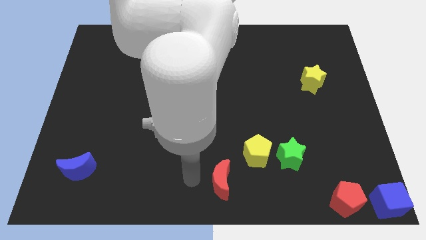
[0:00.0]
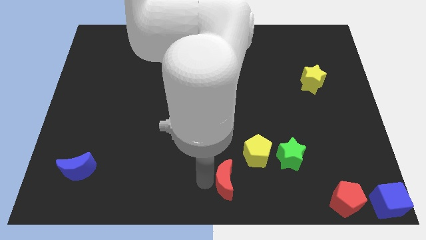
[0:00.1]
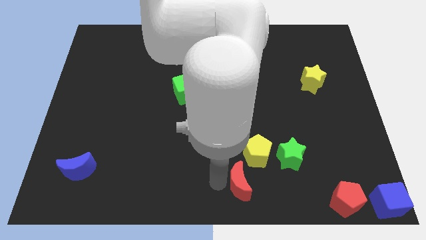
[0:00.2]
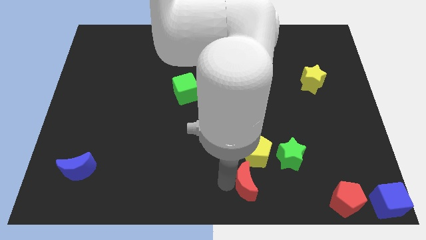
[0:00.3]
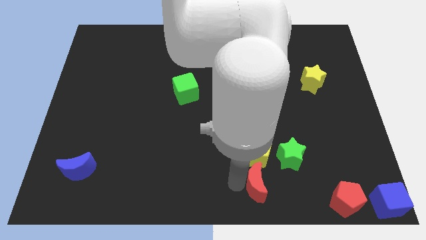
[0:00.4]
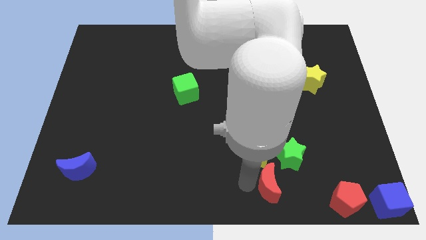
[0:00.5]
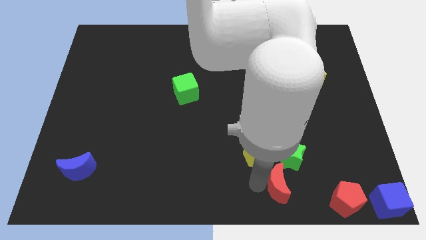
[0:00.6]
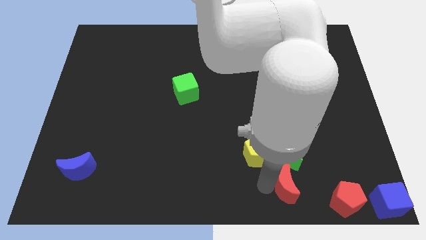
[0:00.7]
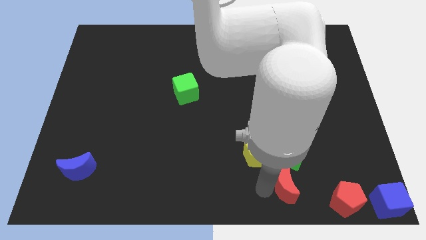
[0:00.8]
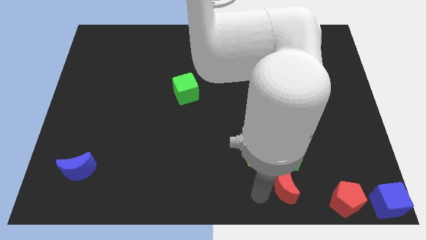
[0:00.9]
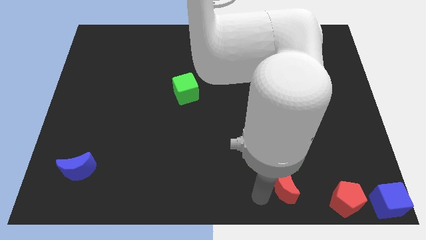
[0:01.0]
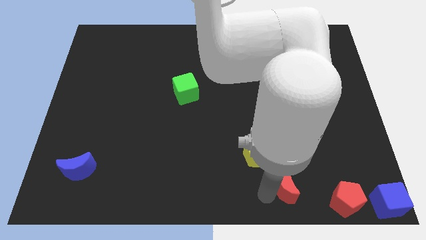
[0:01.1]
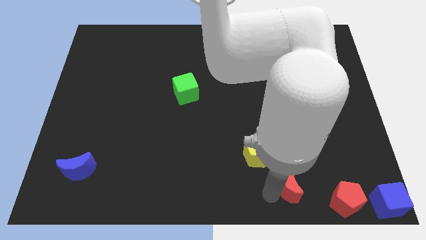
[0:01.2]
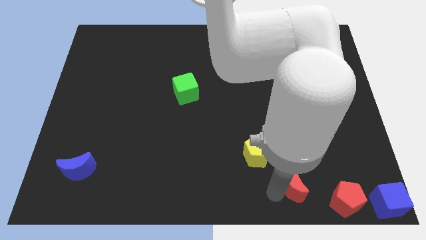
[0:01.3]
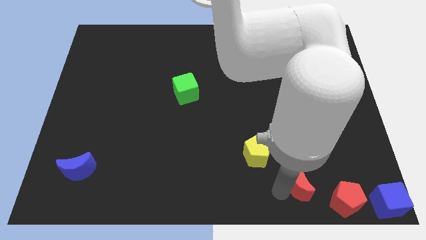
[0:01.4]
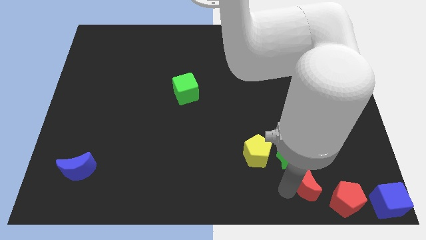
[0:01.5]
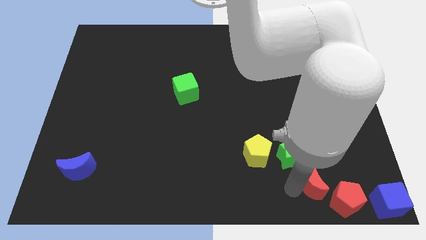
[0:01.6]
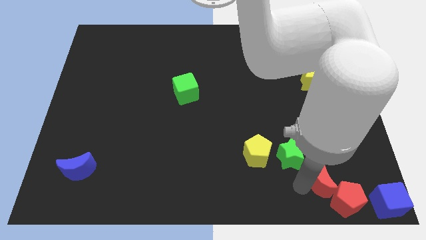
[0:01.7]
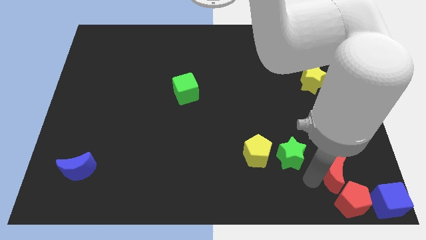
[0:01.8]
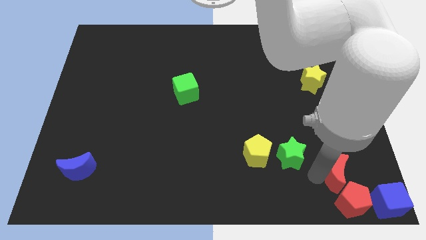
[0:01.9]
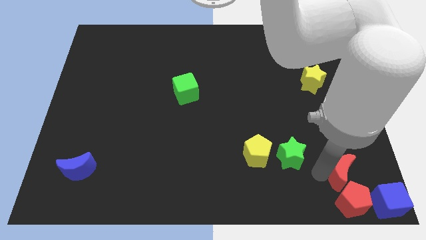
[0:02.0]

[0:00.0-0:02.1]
push red crescent to the top of red pentagon

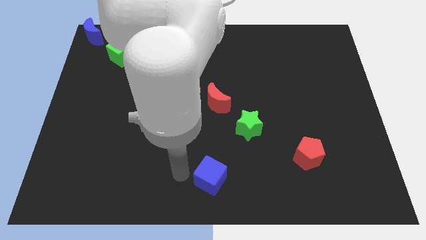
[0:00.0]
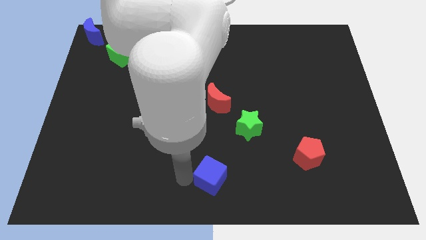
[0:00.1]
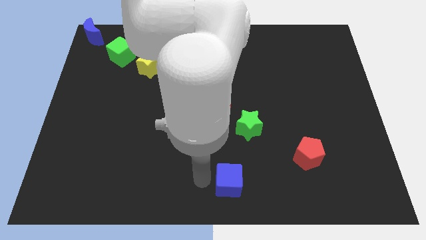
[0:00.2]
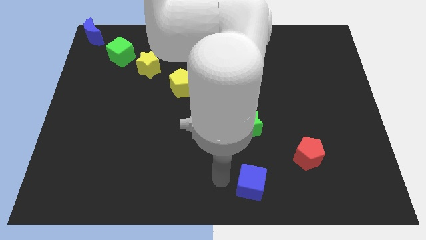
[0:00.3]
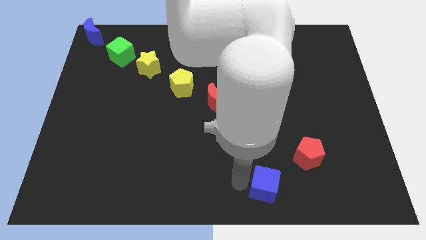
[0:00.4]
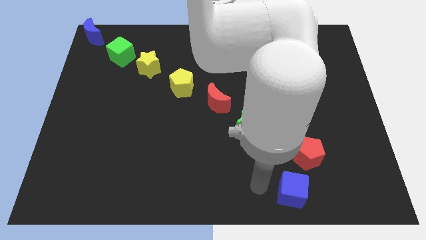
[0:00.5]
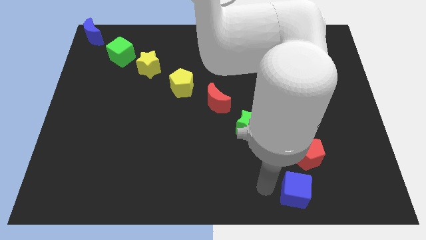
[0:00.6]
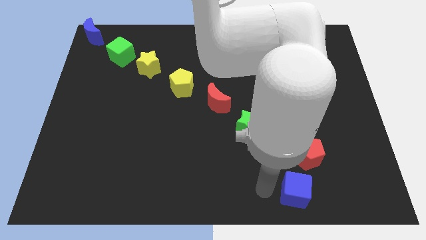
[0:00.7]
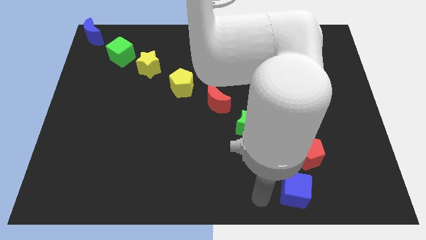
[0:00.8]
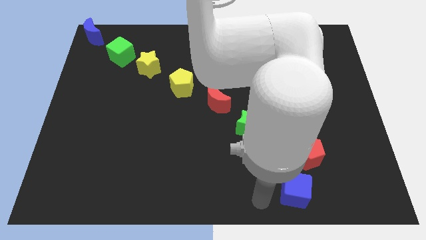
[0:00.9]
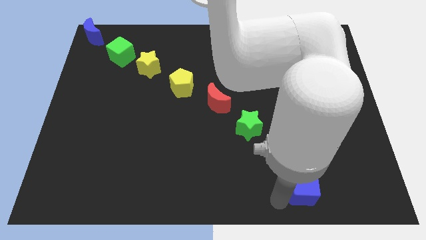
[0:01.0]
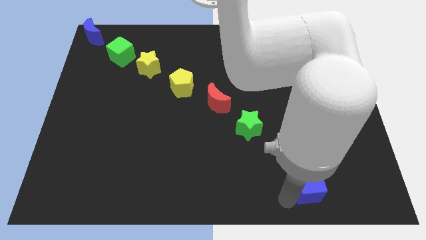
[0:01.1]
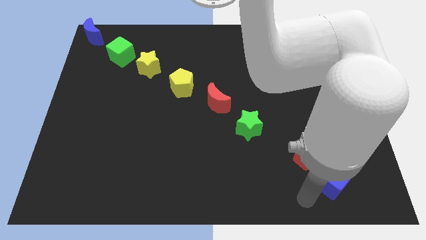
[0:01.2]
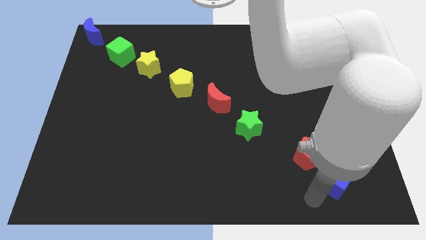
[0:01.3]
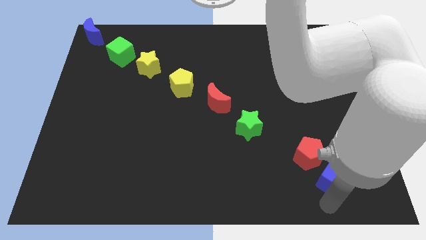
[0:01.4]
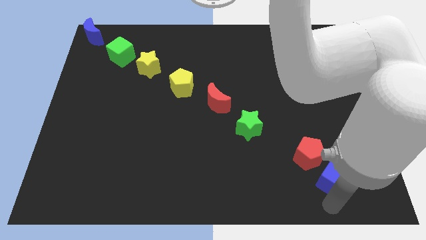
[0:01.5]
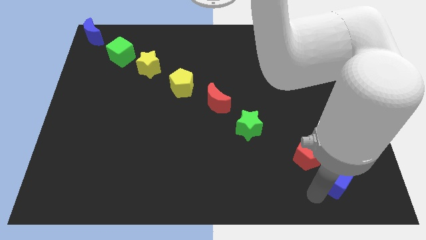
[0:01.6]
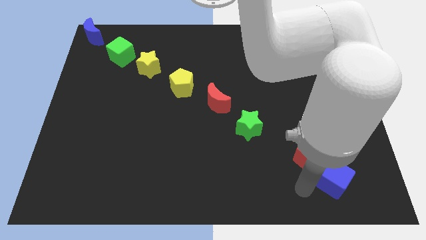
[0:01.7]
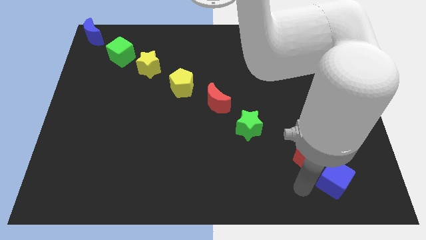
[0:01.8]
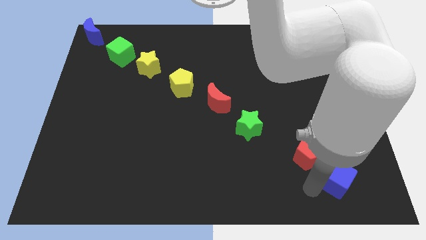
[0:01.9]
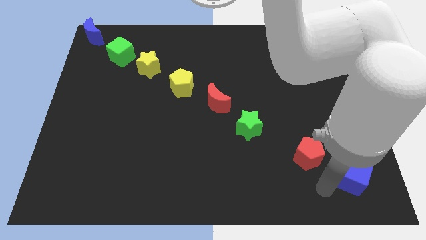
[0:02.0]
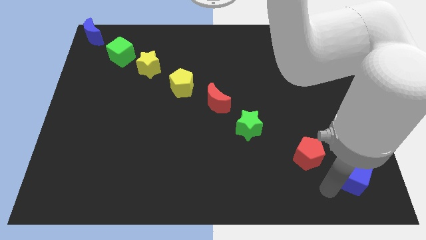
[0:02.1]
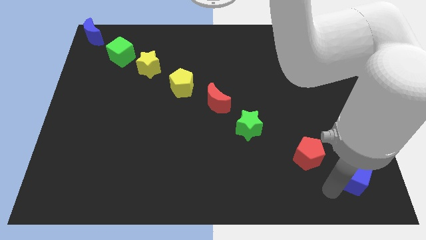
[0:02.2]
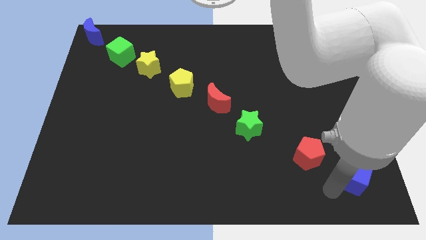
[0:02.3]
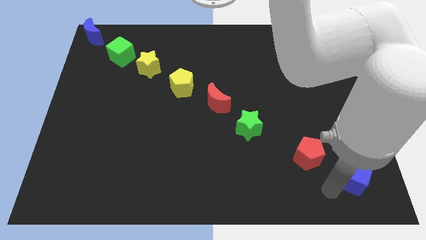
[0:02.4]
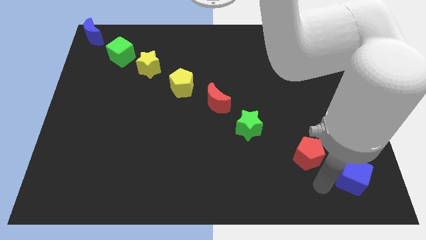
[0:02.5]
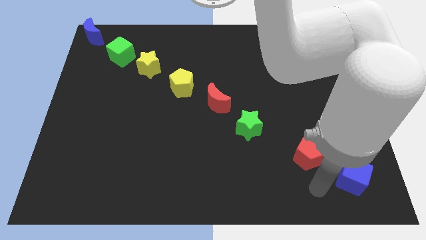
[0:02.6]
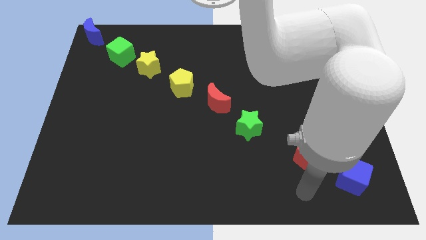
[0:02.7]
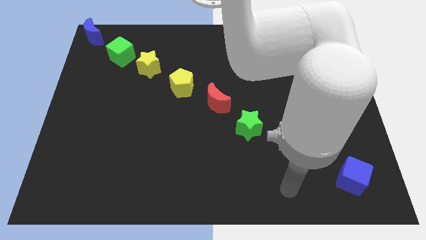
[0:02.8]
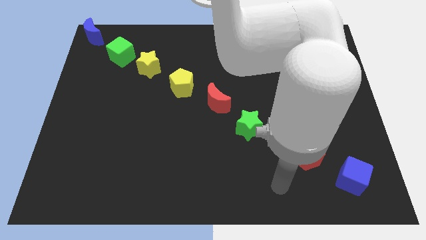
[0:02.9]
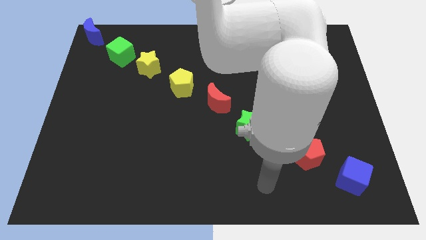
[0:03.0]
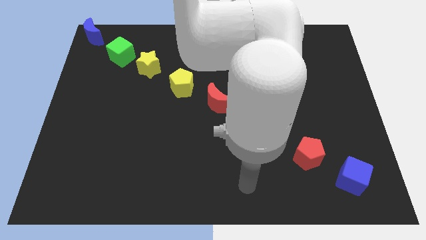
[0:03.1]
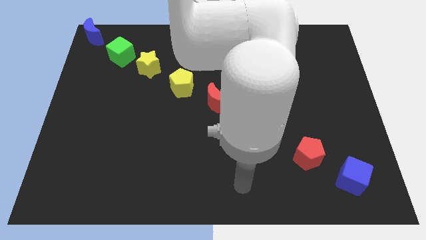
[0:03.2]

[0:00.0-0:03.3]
move the blue cube to the bottom right corner of the board

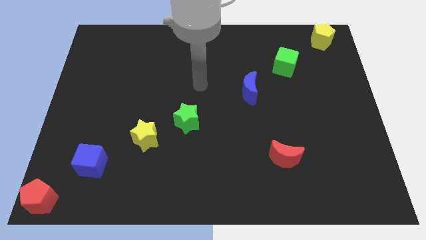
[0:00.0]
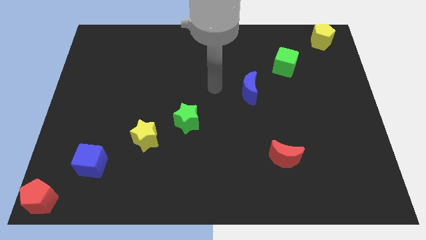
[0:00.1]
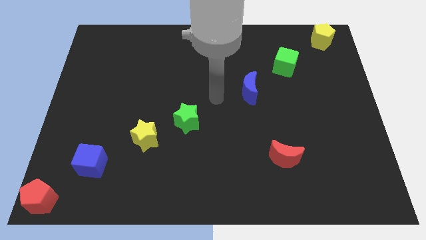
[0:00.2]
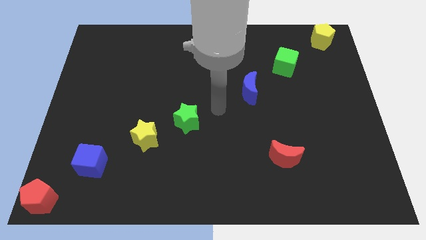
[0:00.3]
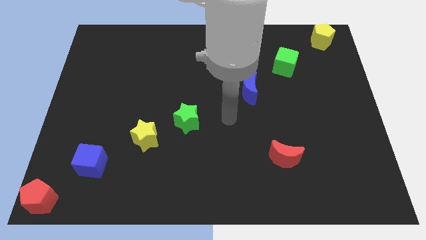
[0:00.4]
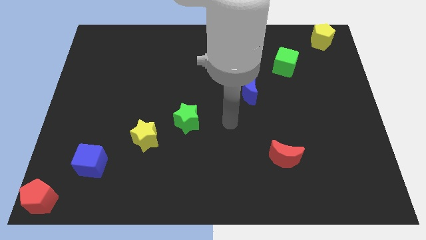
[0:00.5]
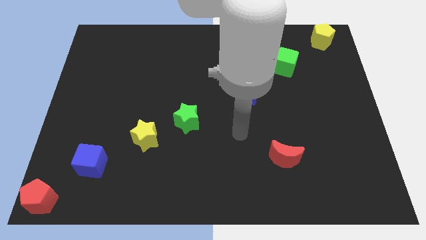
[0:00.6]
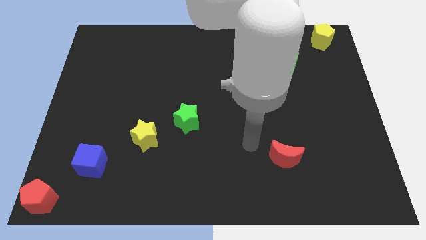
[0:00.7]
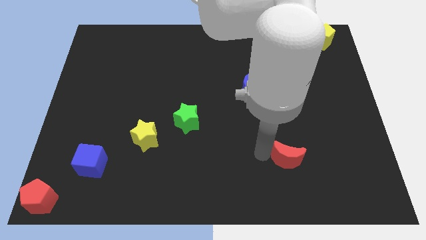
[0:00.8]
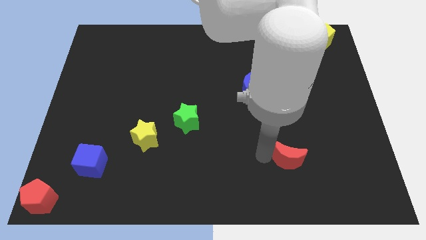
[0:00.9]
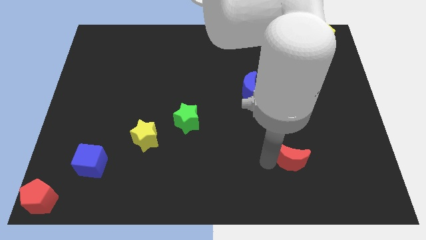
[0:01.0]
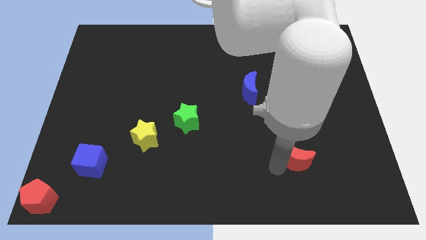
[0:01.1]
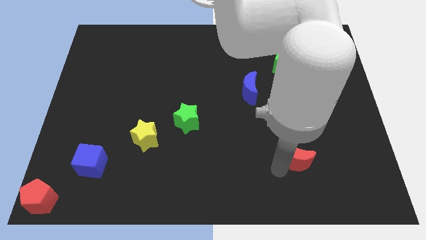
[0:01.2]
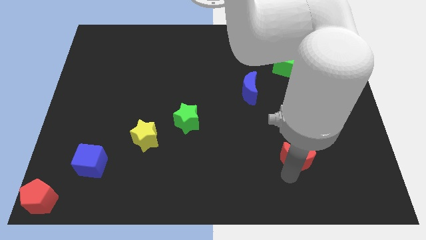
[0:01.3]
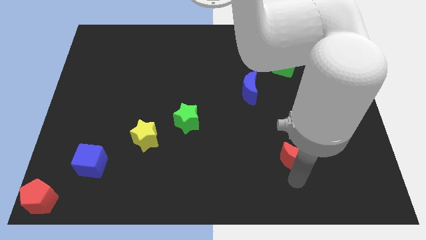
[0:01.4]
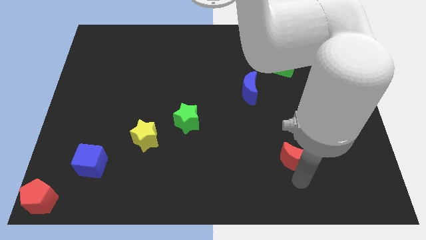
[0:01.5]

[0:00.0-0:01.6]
move your ahnd to the bottom side of the red crescent

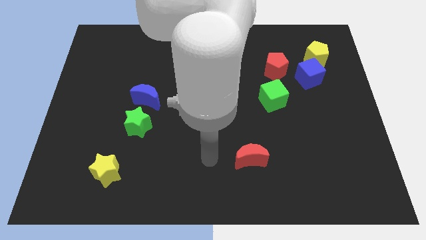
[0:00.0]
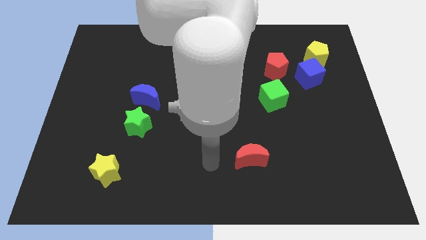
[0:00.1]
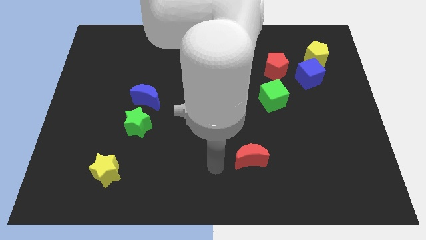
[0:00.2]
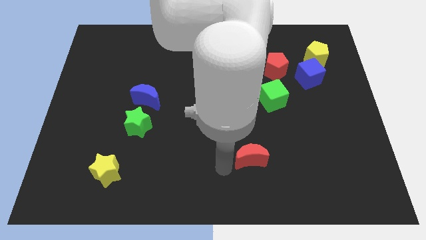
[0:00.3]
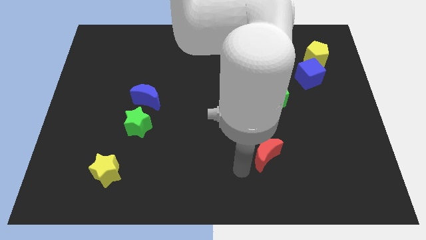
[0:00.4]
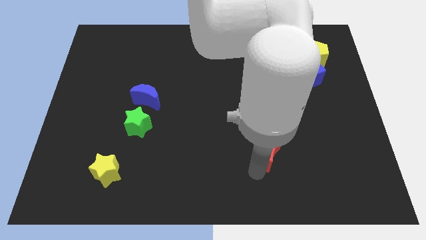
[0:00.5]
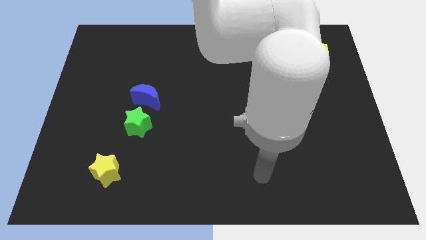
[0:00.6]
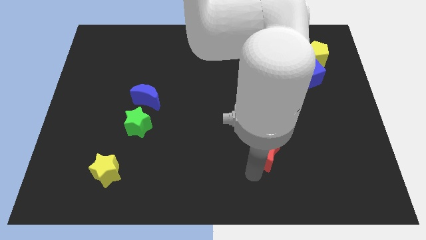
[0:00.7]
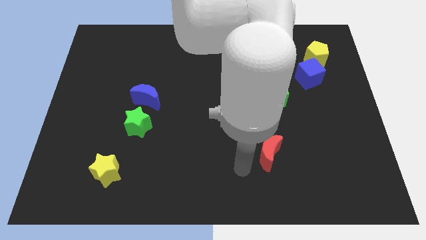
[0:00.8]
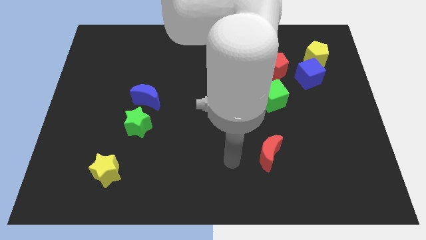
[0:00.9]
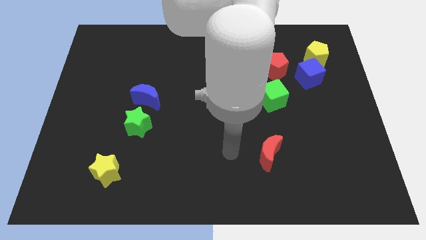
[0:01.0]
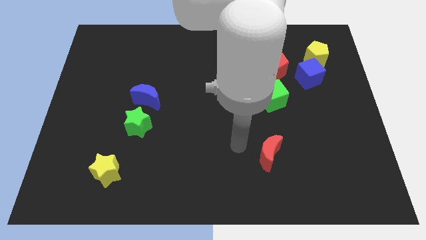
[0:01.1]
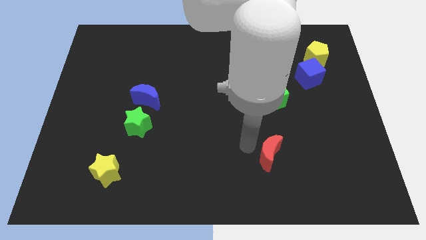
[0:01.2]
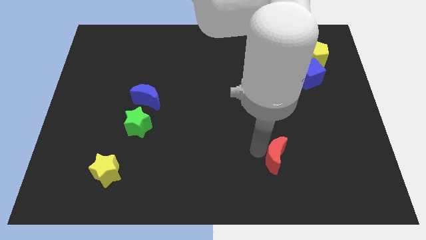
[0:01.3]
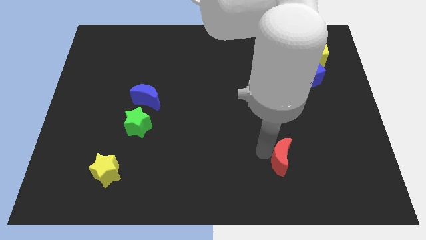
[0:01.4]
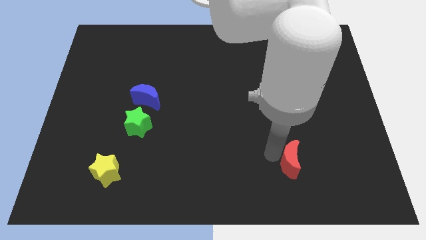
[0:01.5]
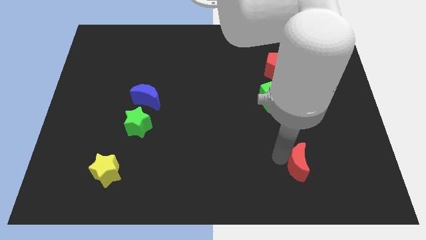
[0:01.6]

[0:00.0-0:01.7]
slide the red moon below the green cube

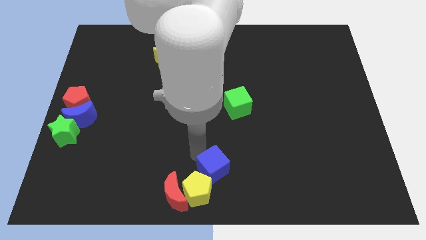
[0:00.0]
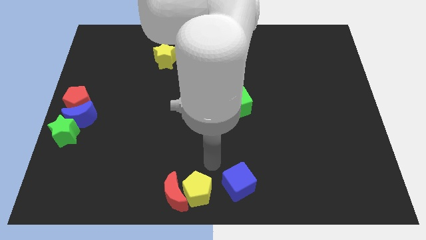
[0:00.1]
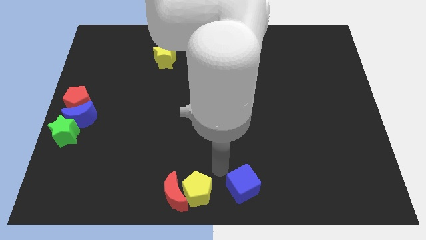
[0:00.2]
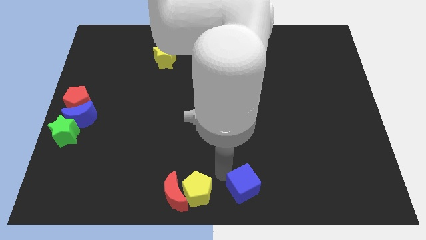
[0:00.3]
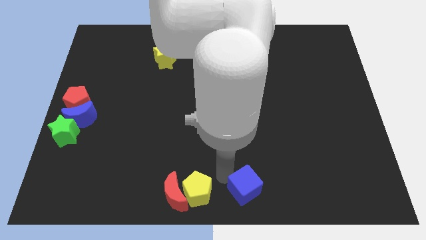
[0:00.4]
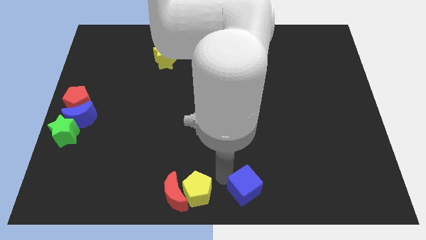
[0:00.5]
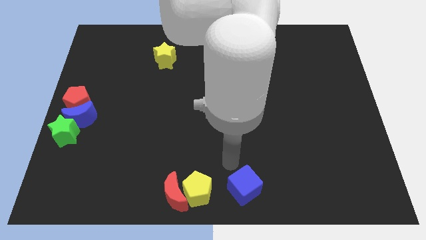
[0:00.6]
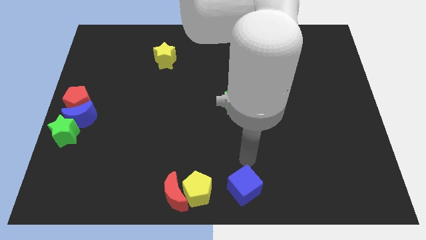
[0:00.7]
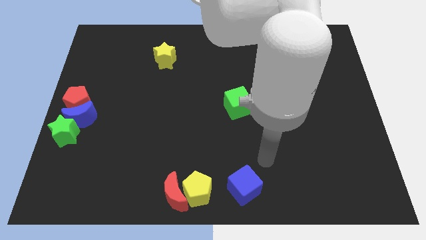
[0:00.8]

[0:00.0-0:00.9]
push the blue cube to the right of the yellow pentagon
